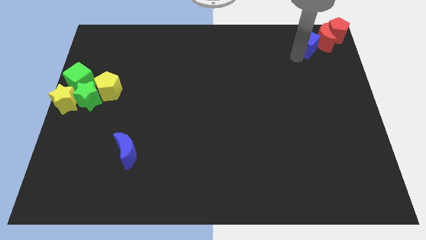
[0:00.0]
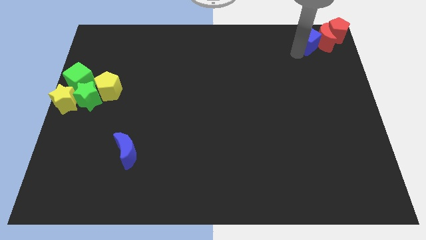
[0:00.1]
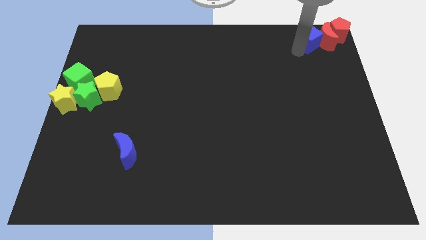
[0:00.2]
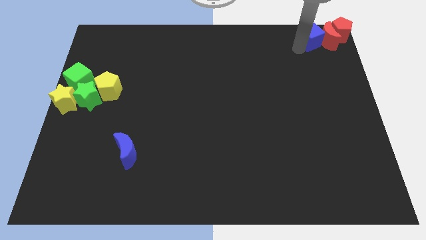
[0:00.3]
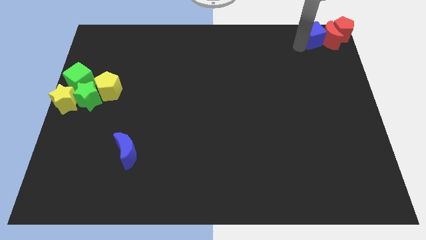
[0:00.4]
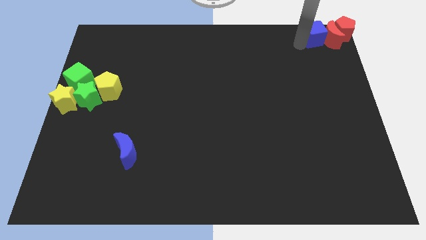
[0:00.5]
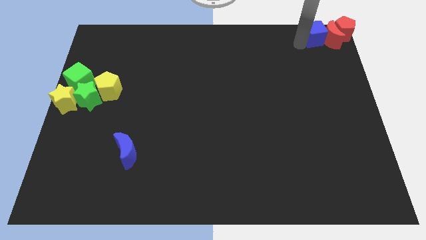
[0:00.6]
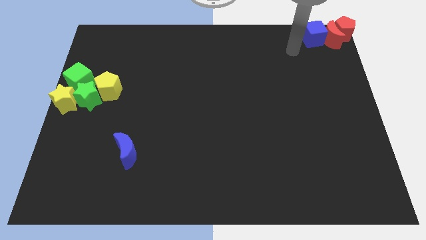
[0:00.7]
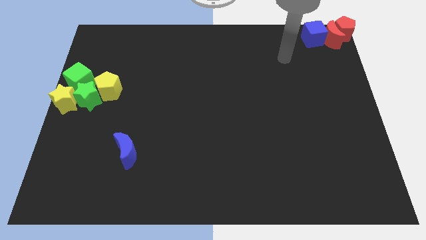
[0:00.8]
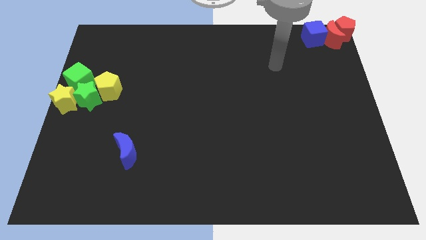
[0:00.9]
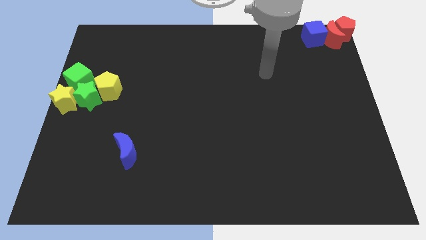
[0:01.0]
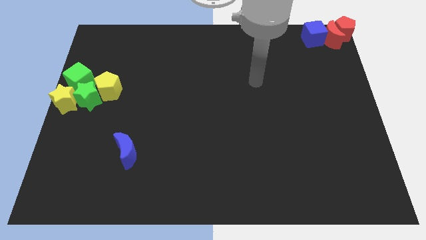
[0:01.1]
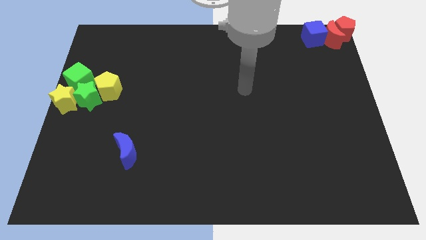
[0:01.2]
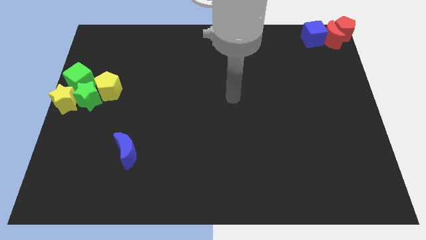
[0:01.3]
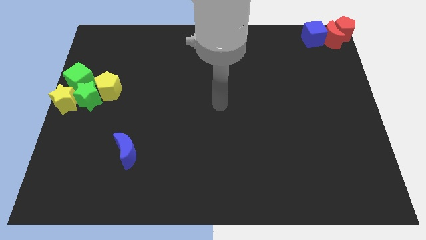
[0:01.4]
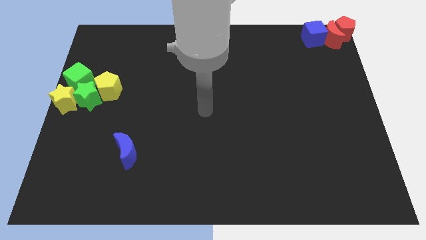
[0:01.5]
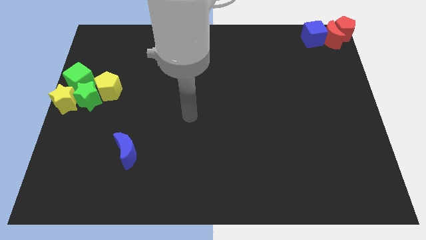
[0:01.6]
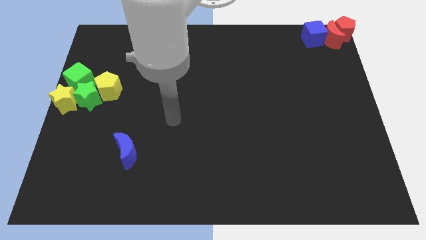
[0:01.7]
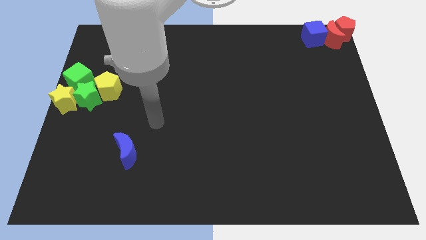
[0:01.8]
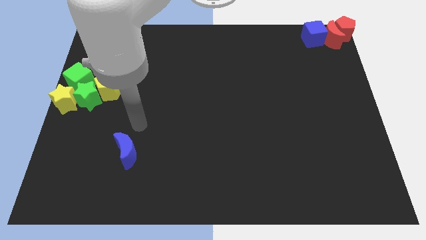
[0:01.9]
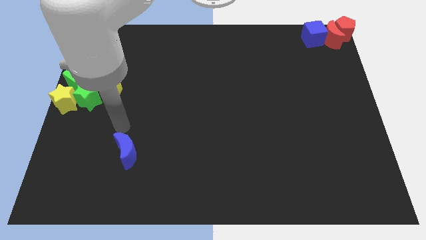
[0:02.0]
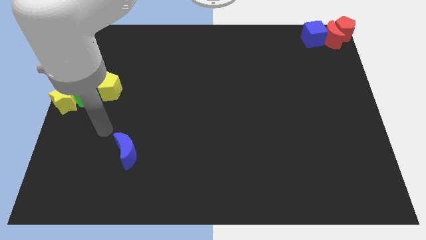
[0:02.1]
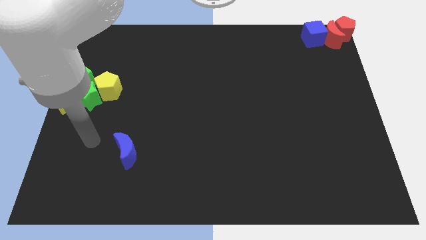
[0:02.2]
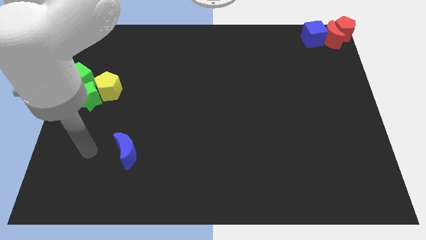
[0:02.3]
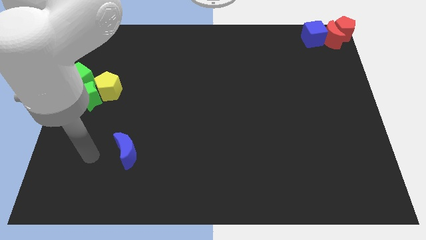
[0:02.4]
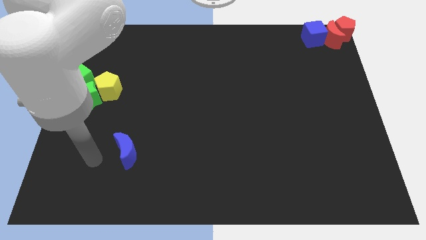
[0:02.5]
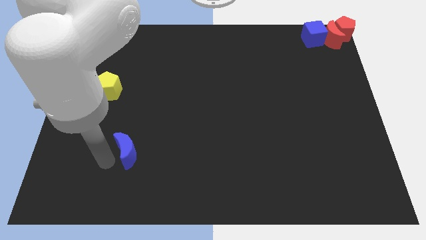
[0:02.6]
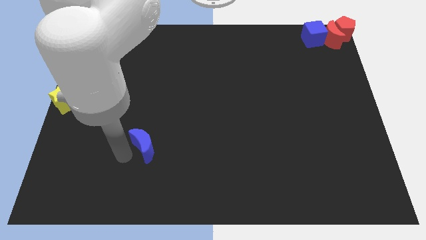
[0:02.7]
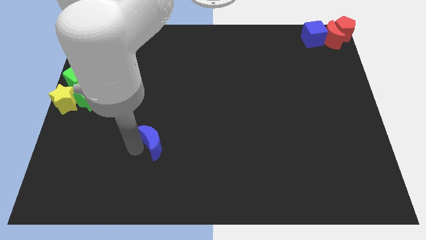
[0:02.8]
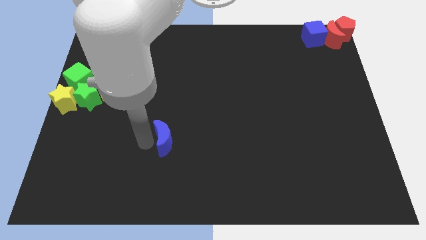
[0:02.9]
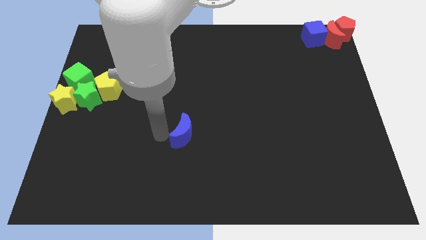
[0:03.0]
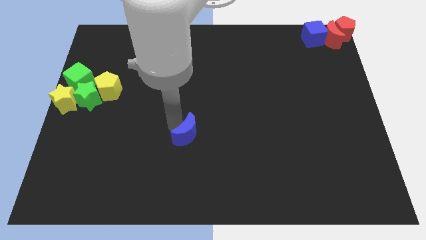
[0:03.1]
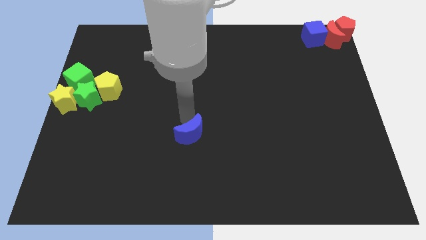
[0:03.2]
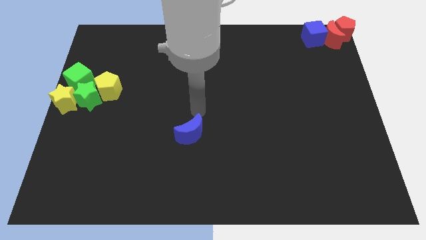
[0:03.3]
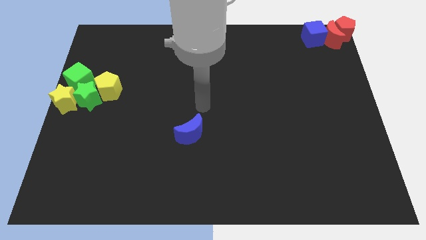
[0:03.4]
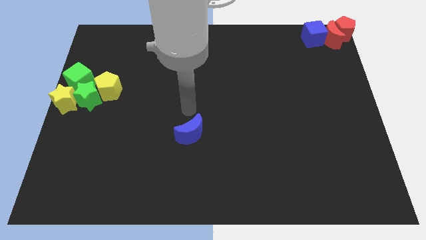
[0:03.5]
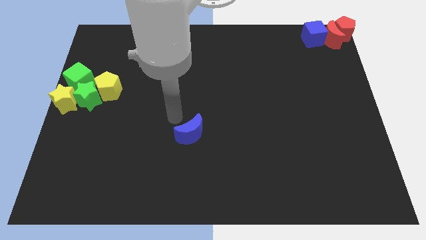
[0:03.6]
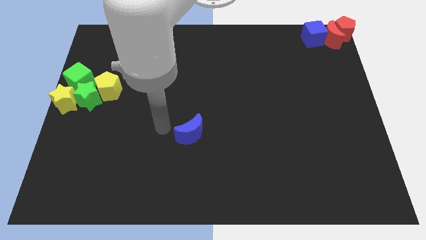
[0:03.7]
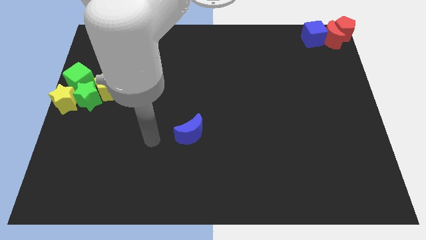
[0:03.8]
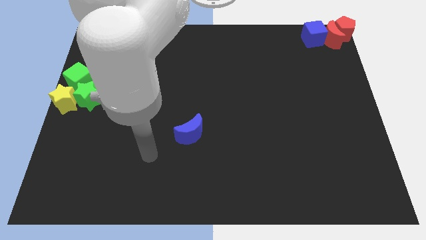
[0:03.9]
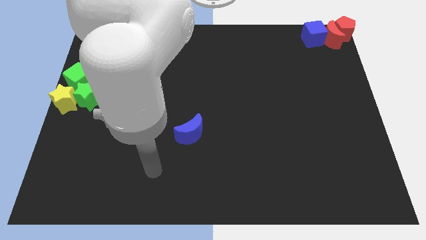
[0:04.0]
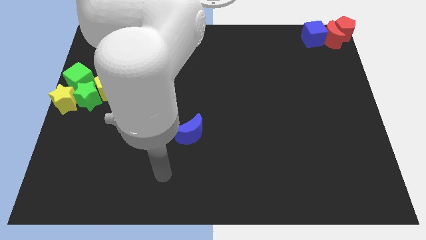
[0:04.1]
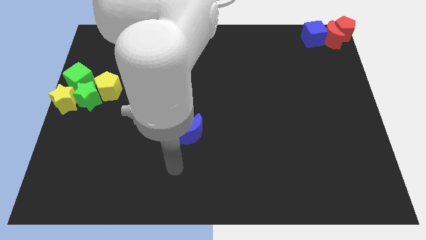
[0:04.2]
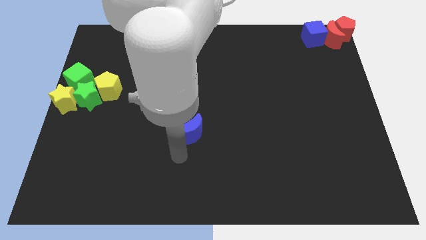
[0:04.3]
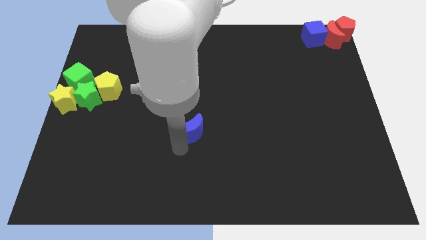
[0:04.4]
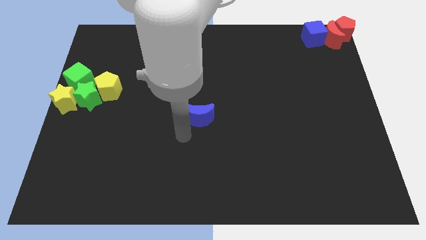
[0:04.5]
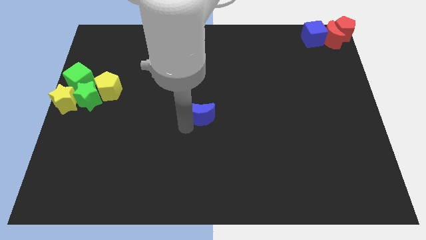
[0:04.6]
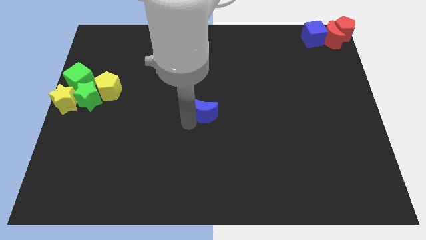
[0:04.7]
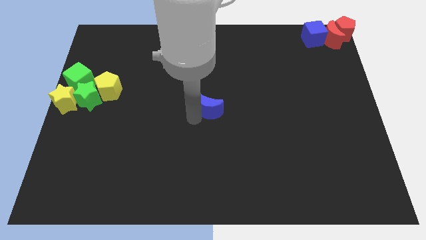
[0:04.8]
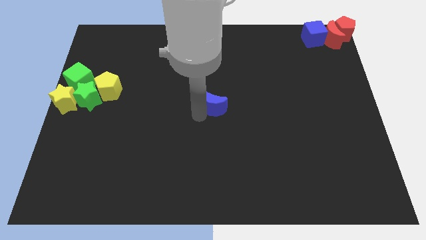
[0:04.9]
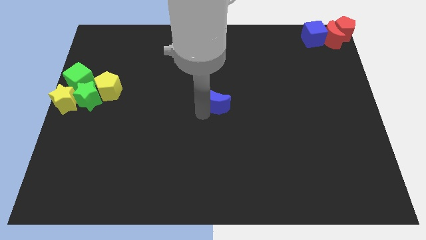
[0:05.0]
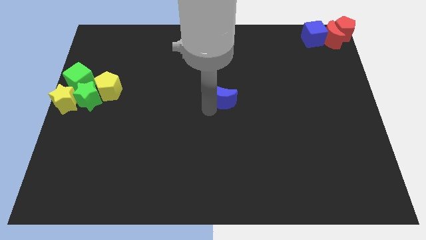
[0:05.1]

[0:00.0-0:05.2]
move the blue moon middle of the board

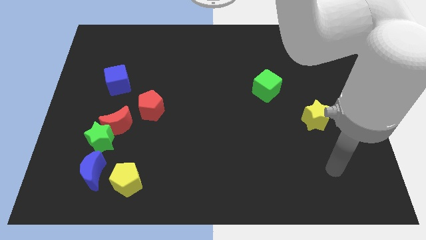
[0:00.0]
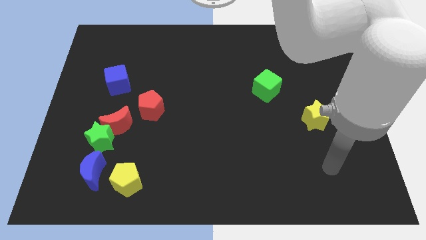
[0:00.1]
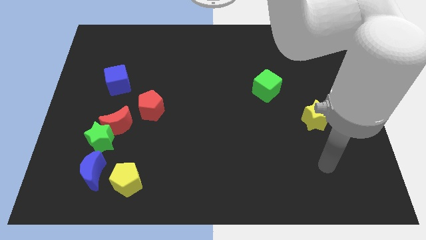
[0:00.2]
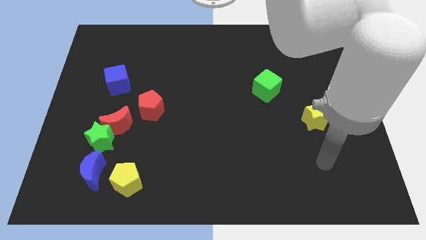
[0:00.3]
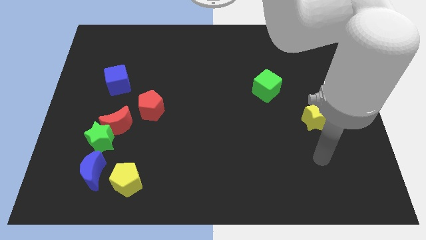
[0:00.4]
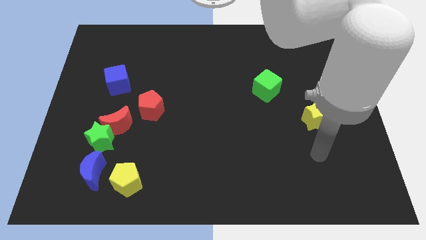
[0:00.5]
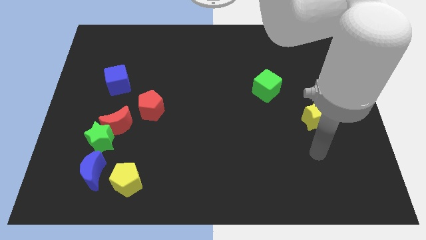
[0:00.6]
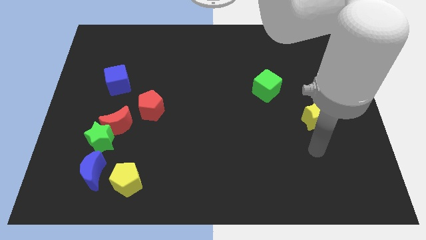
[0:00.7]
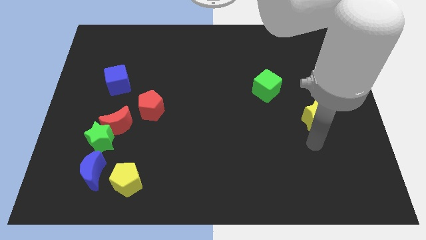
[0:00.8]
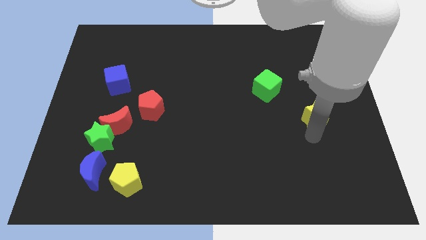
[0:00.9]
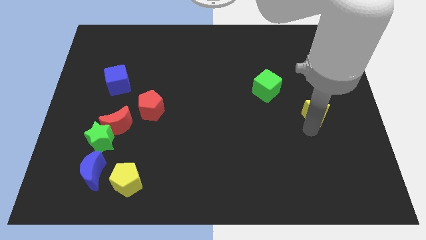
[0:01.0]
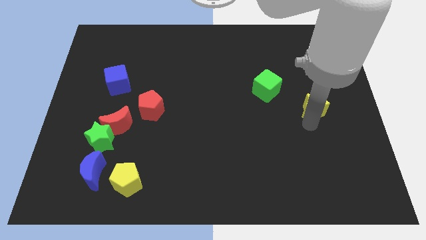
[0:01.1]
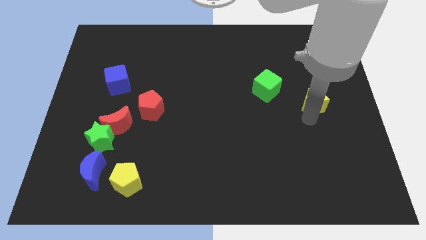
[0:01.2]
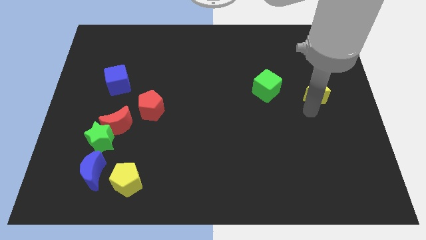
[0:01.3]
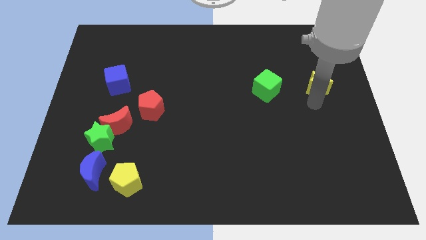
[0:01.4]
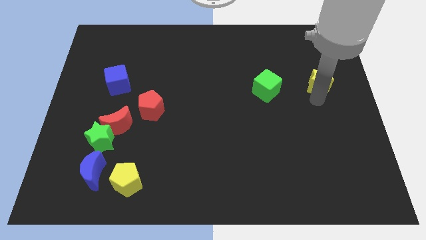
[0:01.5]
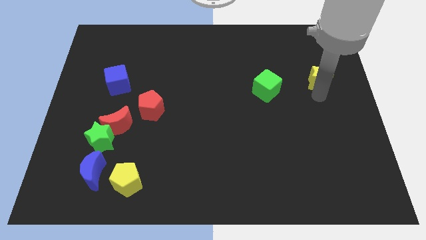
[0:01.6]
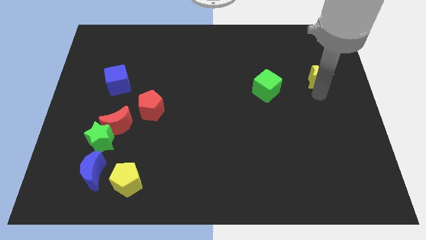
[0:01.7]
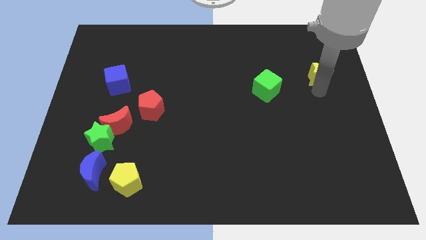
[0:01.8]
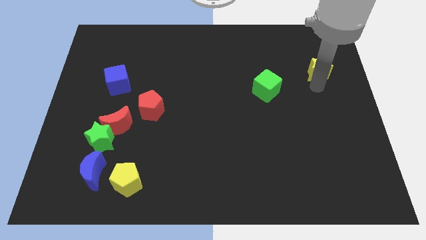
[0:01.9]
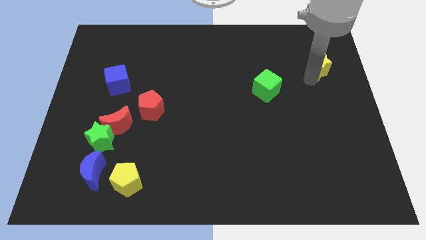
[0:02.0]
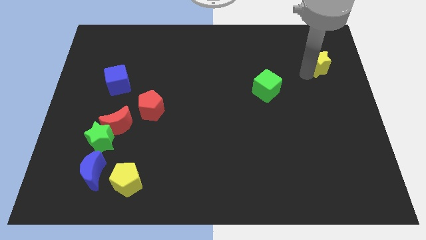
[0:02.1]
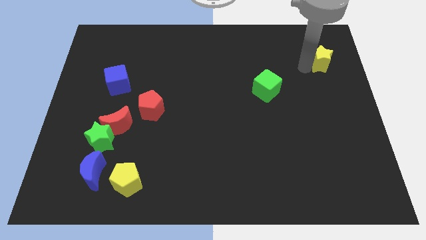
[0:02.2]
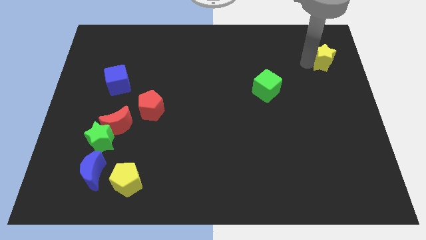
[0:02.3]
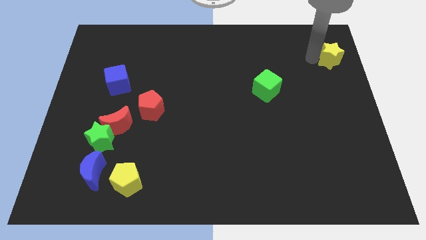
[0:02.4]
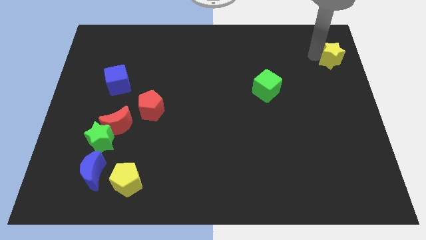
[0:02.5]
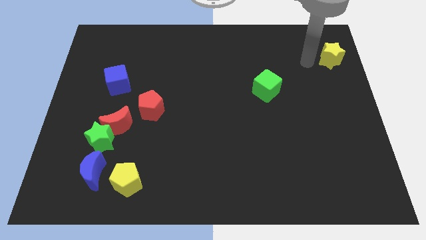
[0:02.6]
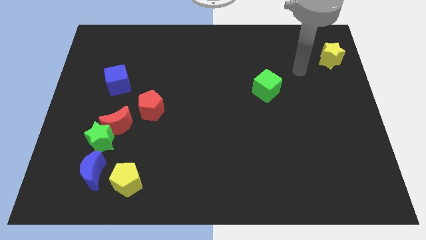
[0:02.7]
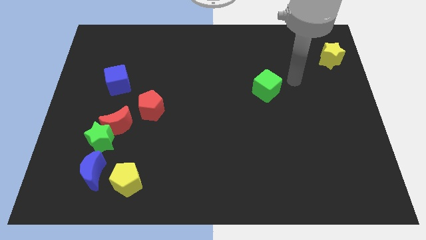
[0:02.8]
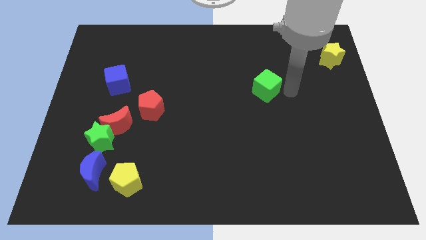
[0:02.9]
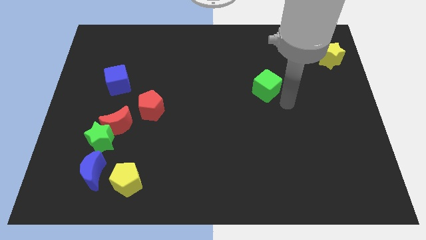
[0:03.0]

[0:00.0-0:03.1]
push the yellow star towards the top right

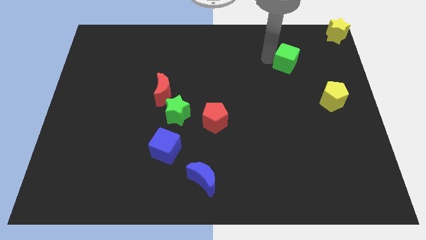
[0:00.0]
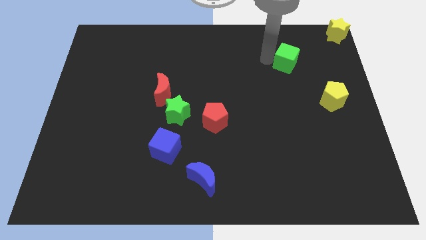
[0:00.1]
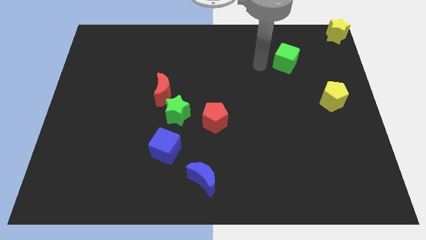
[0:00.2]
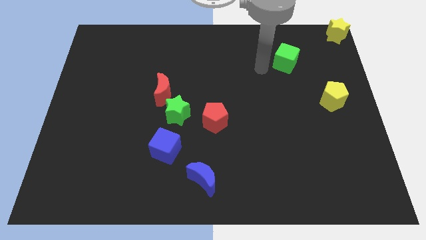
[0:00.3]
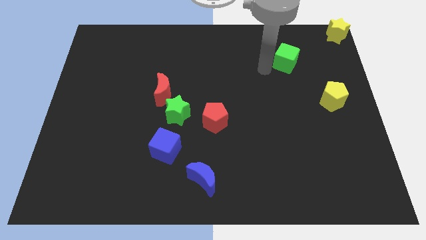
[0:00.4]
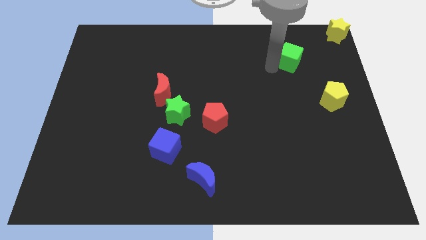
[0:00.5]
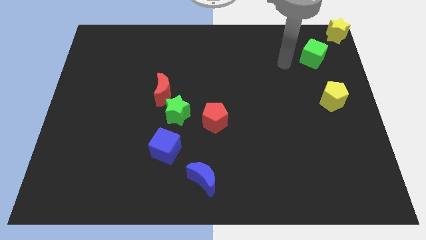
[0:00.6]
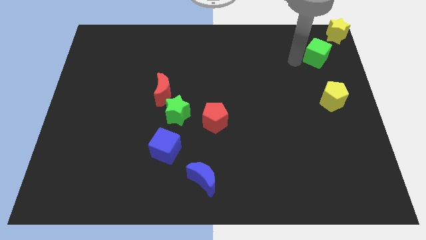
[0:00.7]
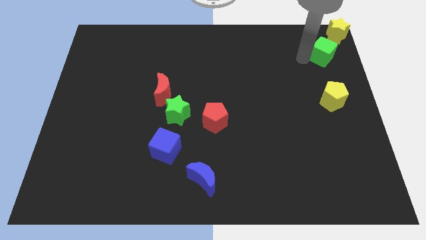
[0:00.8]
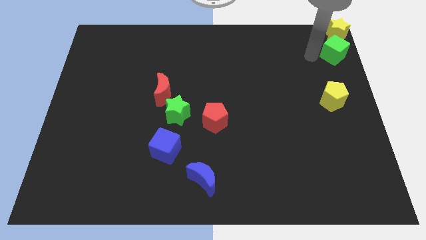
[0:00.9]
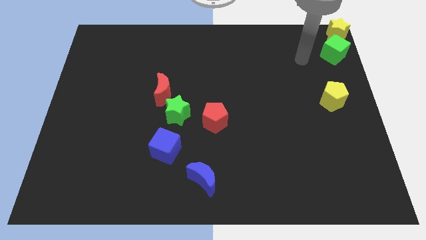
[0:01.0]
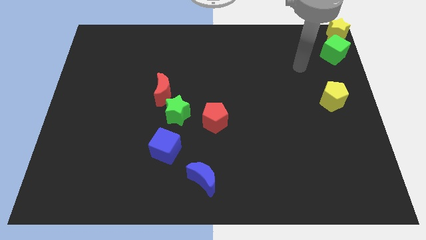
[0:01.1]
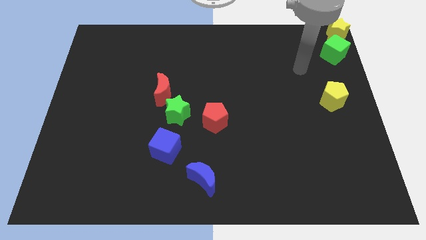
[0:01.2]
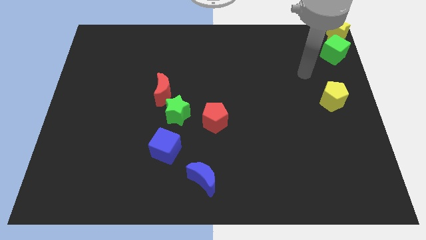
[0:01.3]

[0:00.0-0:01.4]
place the green cube below the yellow star
